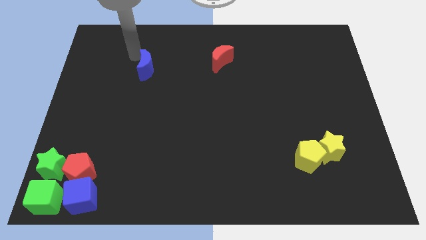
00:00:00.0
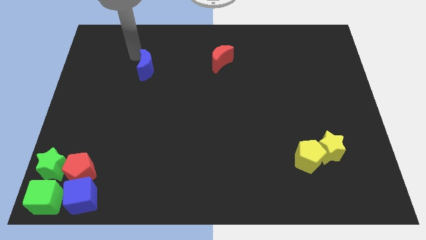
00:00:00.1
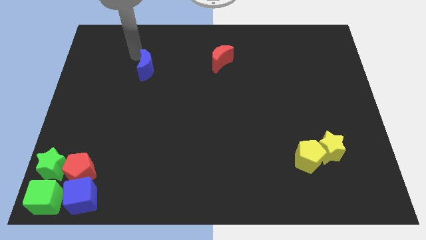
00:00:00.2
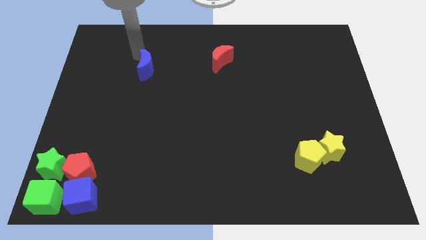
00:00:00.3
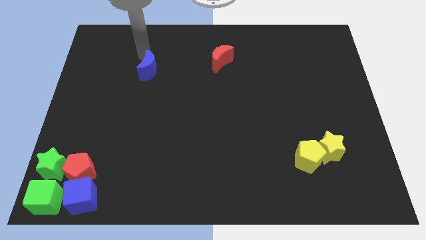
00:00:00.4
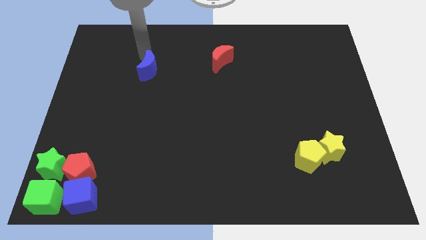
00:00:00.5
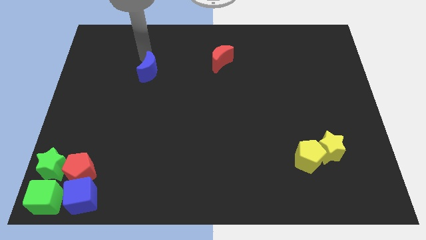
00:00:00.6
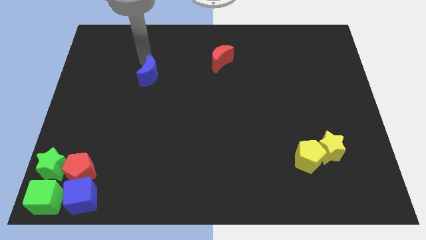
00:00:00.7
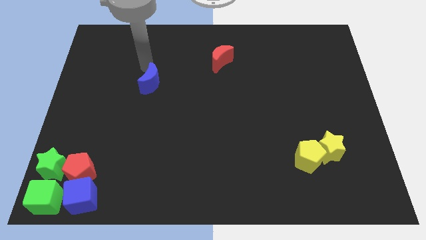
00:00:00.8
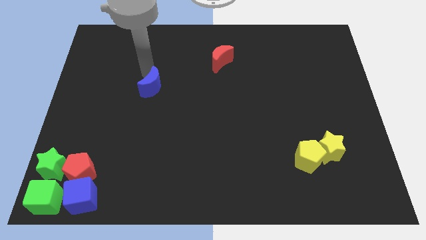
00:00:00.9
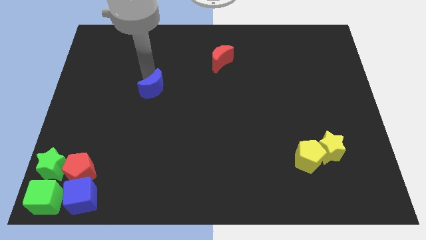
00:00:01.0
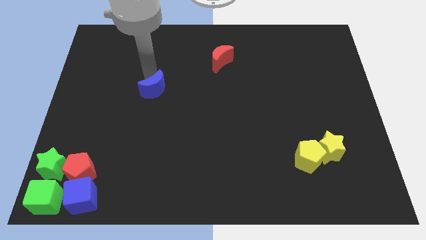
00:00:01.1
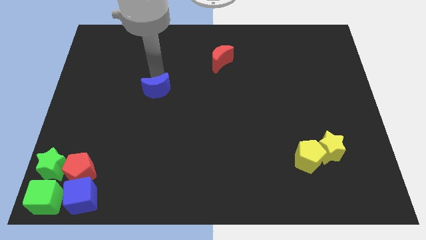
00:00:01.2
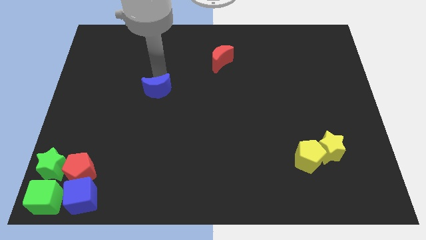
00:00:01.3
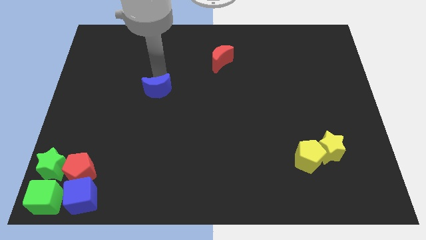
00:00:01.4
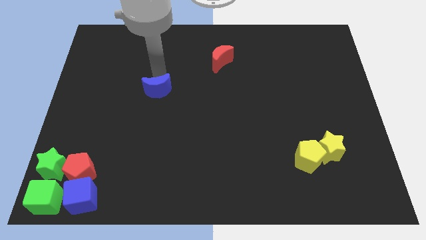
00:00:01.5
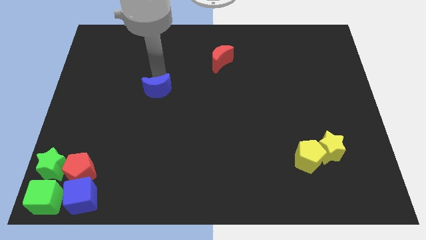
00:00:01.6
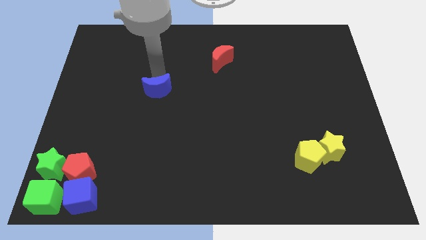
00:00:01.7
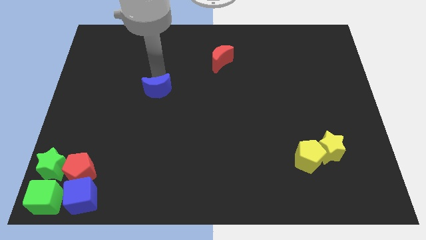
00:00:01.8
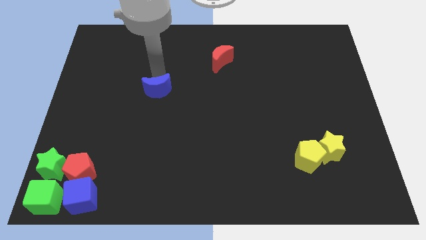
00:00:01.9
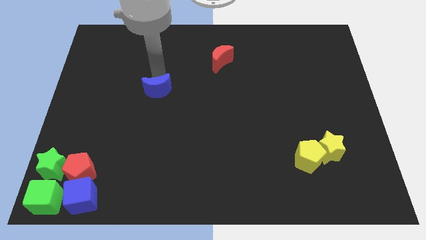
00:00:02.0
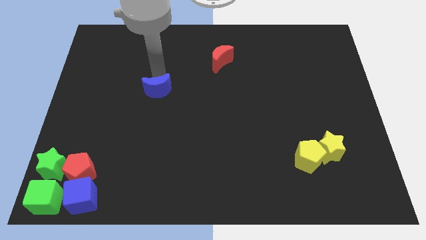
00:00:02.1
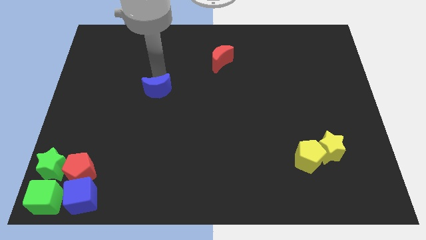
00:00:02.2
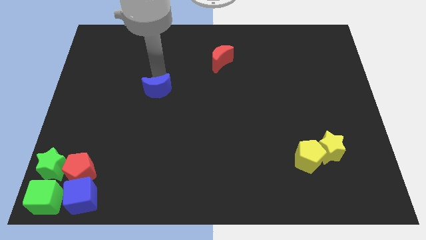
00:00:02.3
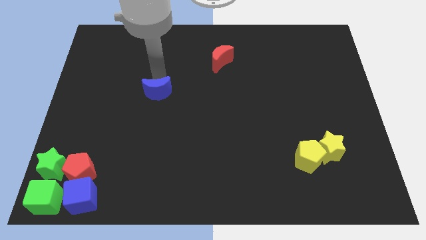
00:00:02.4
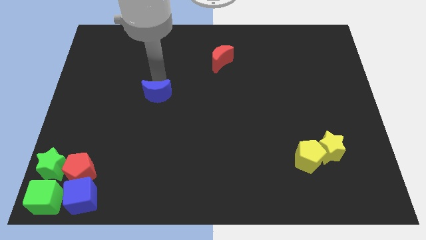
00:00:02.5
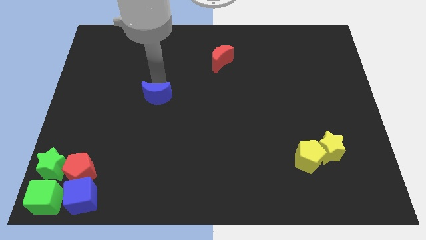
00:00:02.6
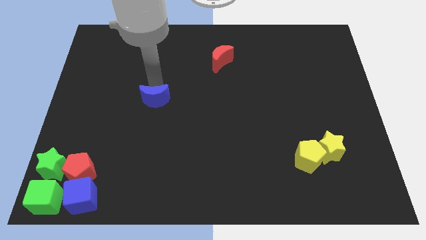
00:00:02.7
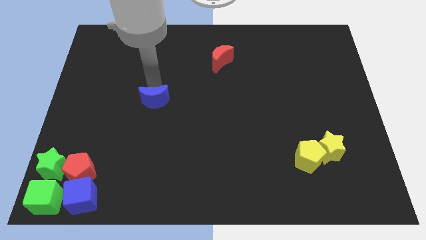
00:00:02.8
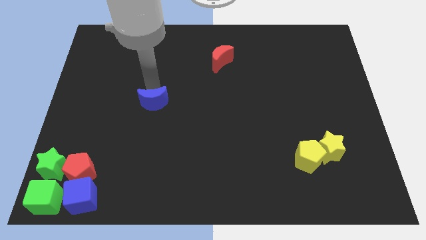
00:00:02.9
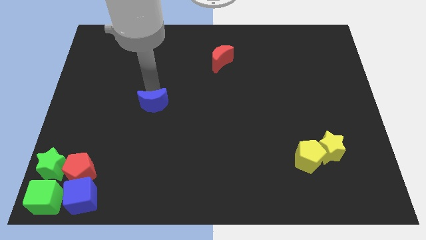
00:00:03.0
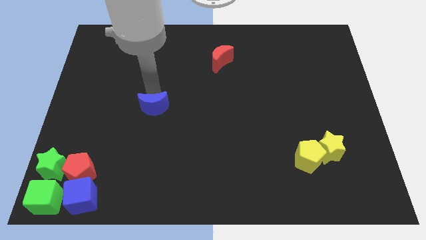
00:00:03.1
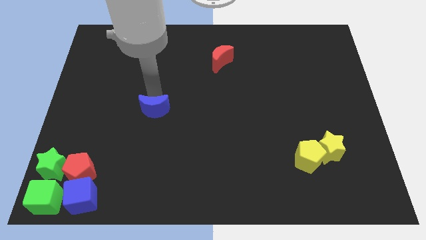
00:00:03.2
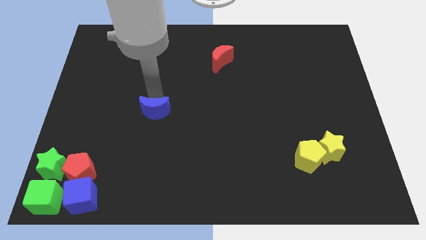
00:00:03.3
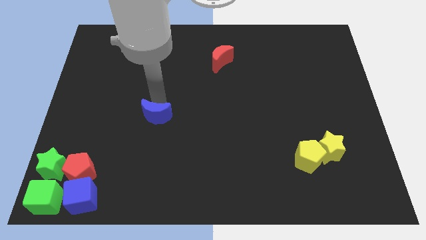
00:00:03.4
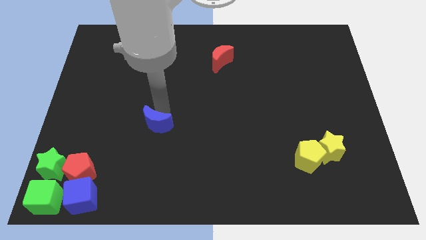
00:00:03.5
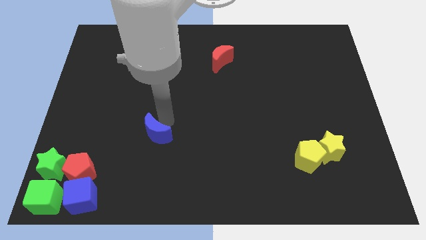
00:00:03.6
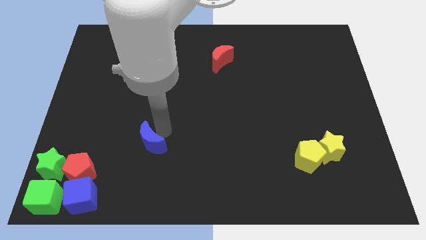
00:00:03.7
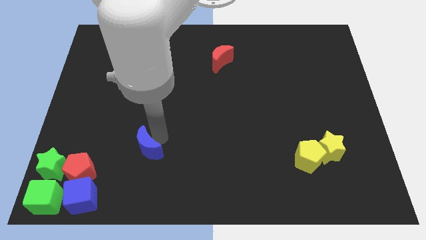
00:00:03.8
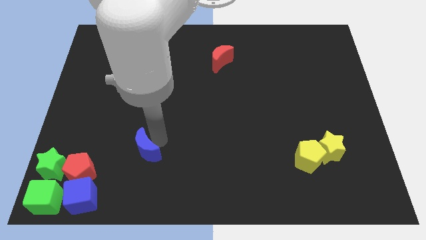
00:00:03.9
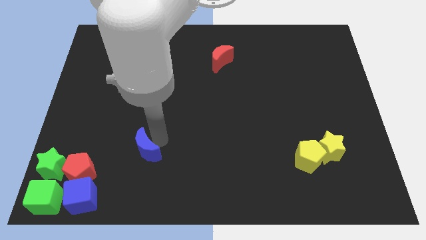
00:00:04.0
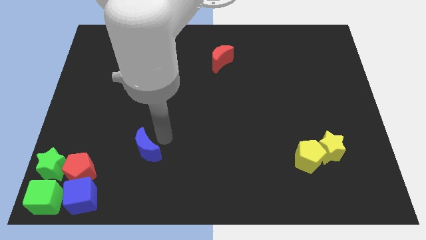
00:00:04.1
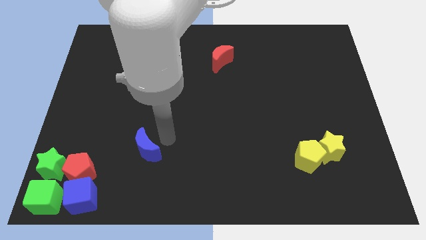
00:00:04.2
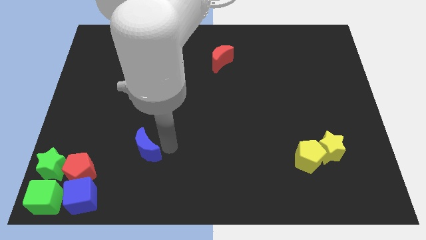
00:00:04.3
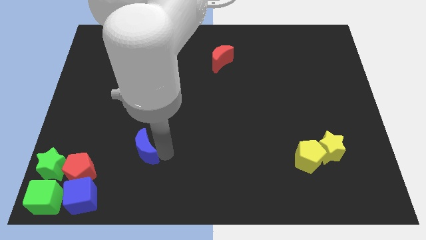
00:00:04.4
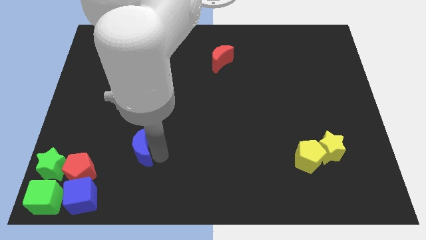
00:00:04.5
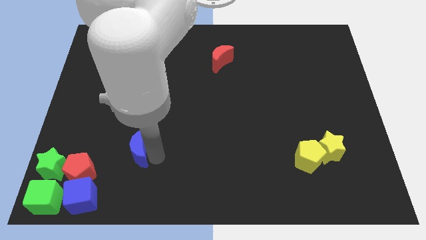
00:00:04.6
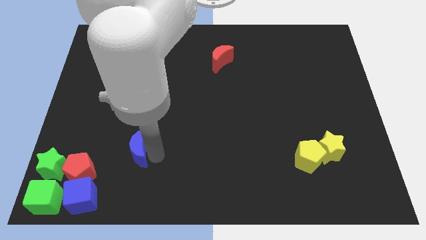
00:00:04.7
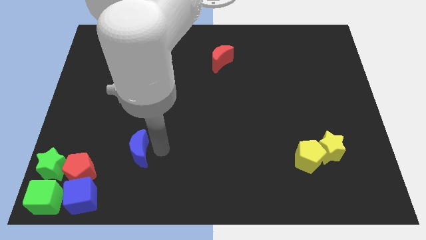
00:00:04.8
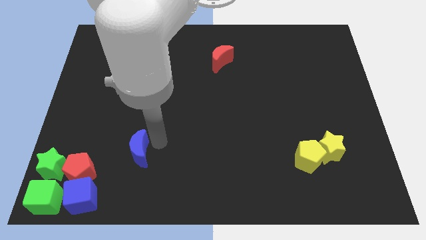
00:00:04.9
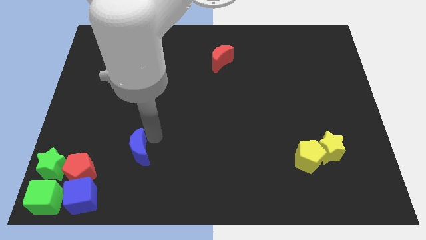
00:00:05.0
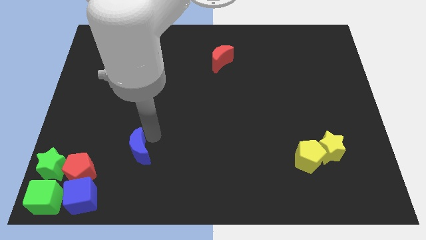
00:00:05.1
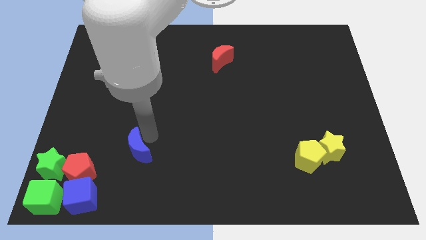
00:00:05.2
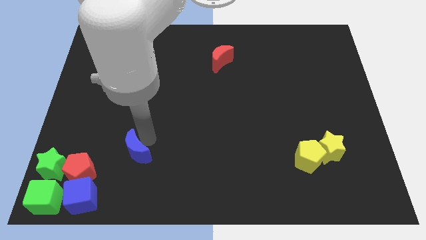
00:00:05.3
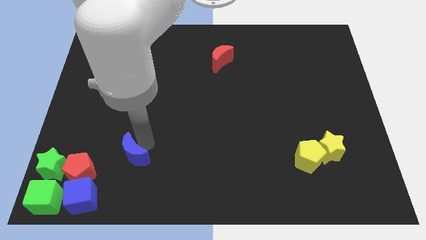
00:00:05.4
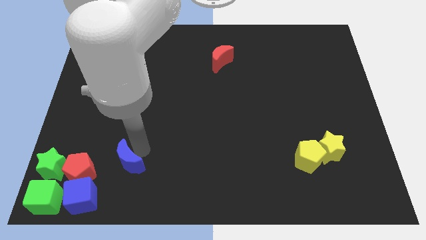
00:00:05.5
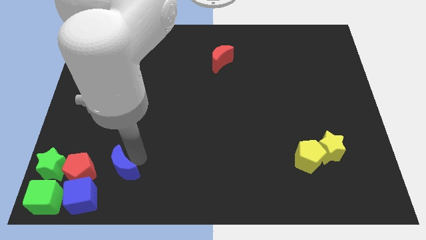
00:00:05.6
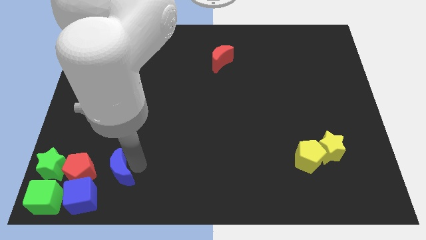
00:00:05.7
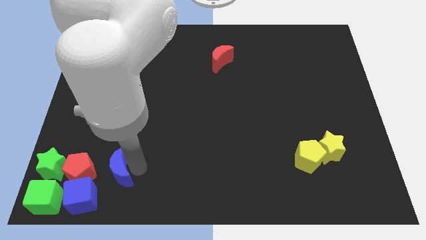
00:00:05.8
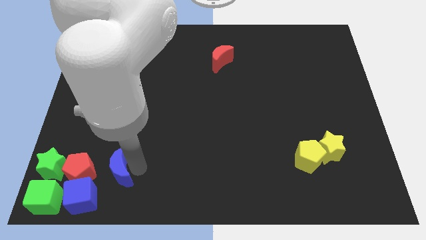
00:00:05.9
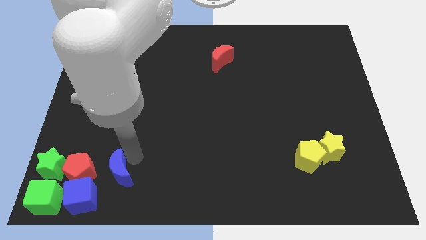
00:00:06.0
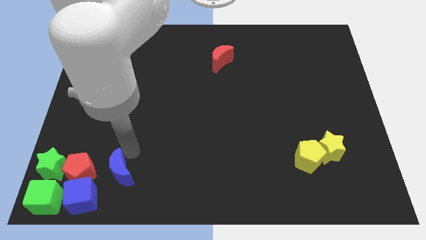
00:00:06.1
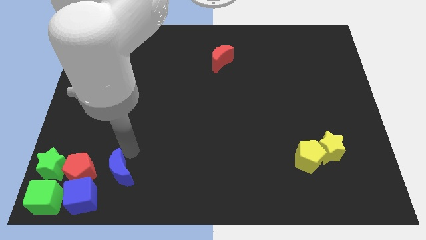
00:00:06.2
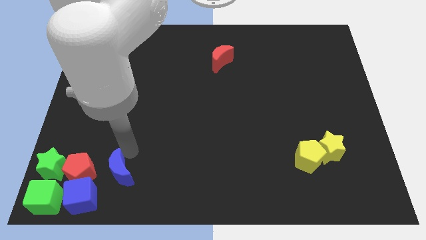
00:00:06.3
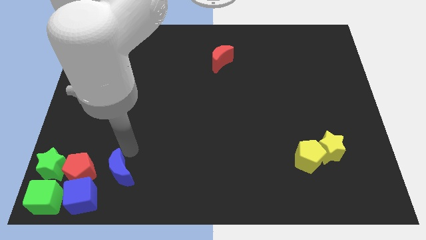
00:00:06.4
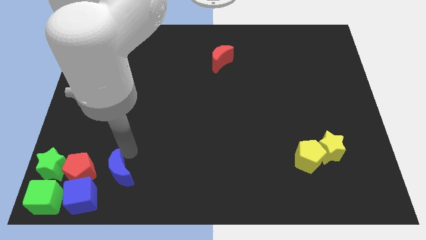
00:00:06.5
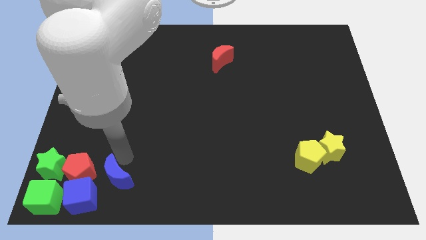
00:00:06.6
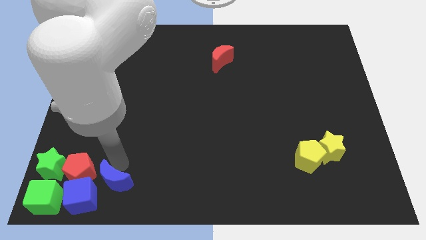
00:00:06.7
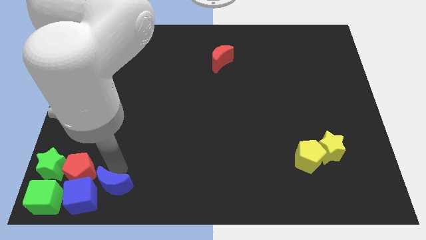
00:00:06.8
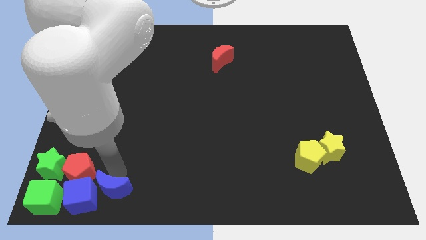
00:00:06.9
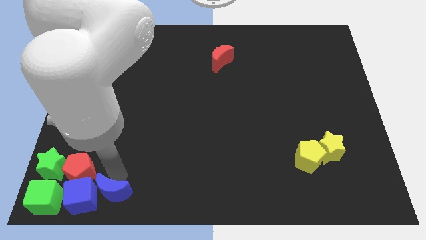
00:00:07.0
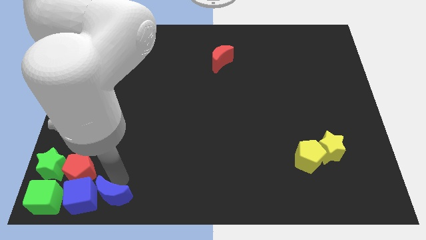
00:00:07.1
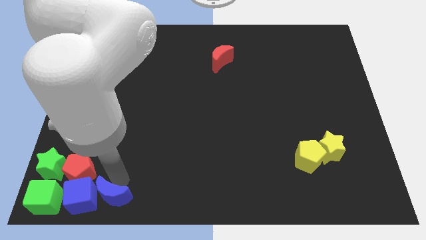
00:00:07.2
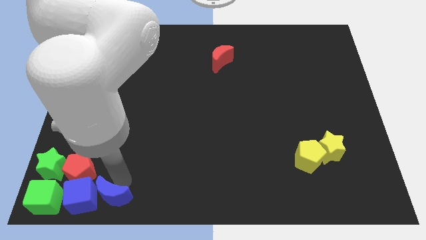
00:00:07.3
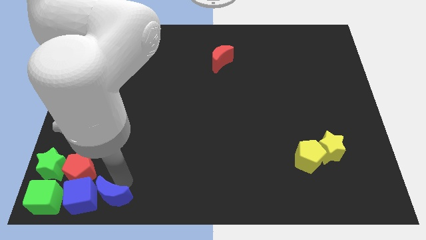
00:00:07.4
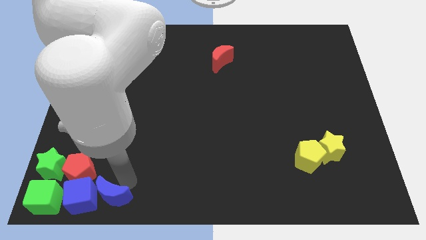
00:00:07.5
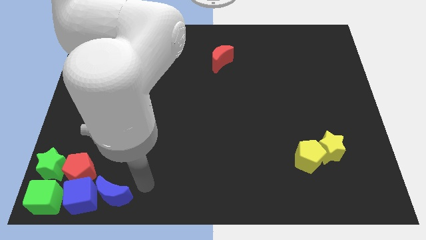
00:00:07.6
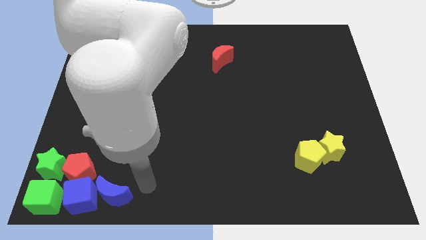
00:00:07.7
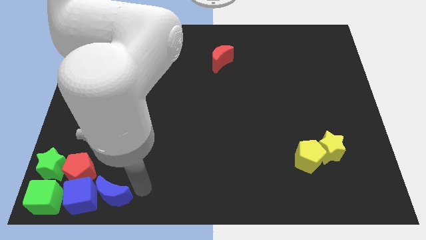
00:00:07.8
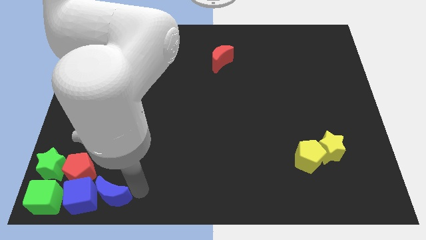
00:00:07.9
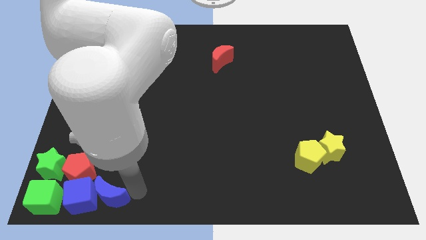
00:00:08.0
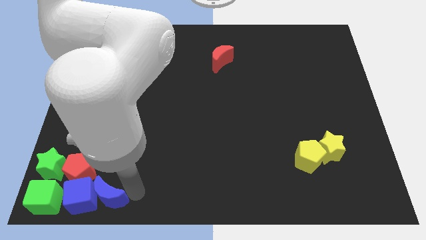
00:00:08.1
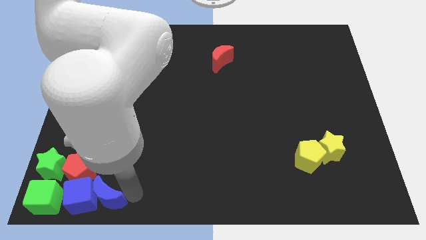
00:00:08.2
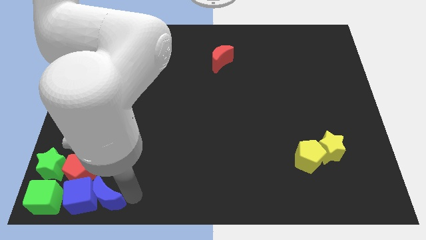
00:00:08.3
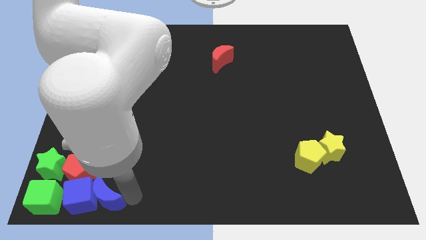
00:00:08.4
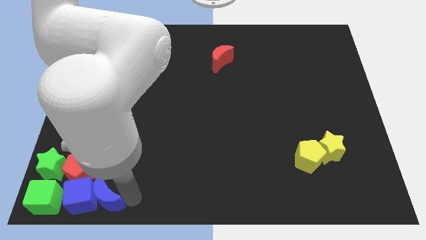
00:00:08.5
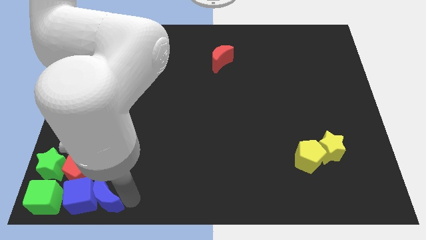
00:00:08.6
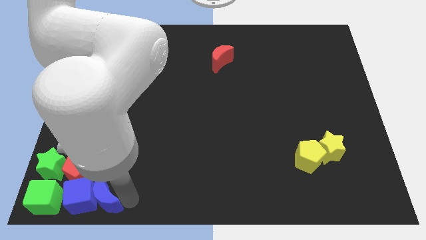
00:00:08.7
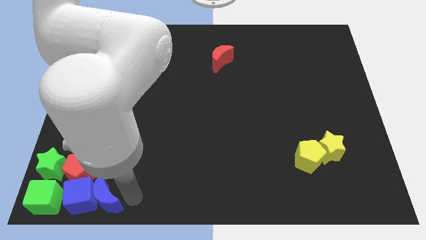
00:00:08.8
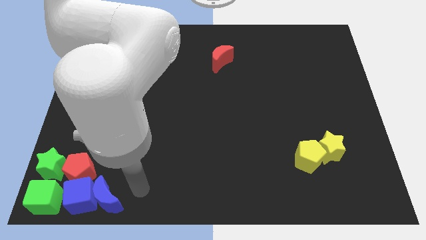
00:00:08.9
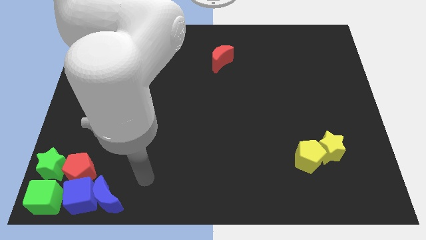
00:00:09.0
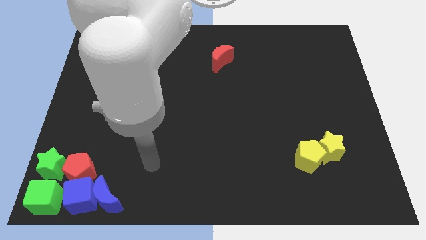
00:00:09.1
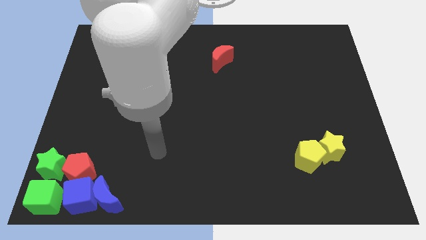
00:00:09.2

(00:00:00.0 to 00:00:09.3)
push the blue crescent close to the blue cube
